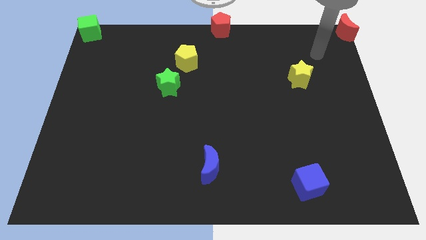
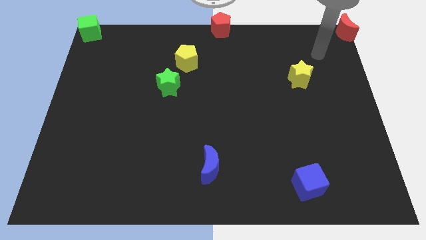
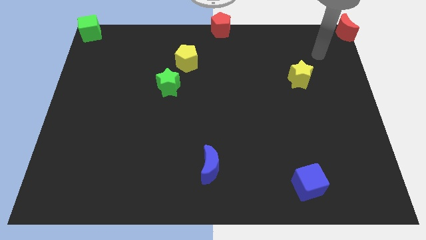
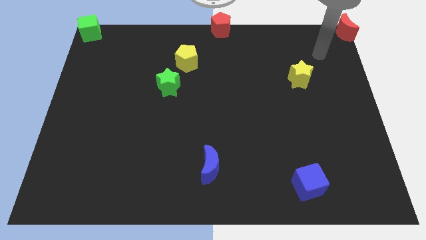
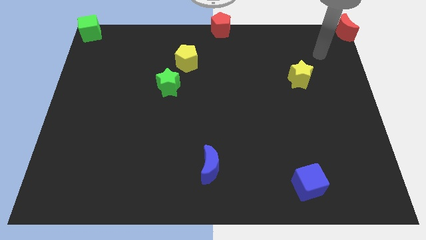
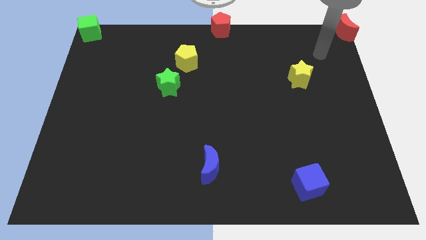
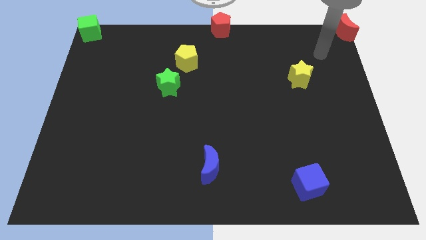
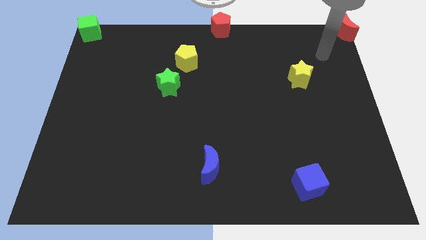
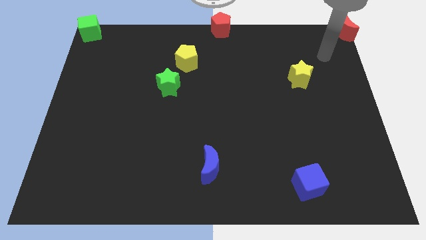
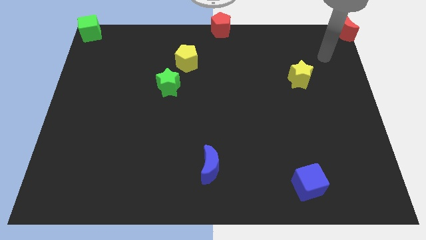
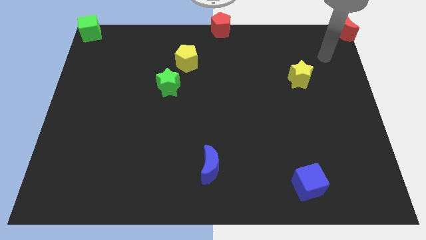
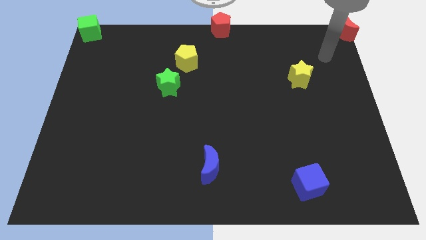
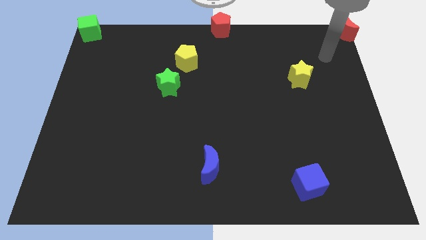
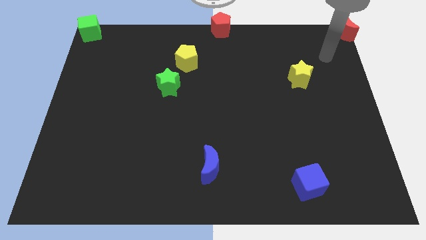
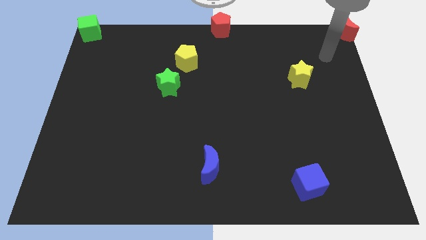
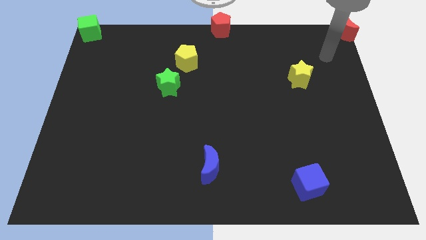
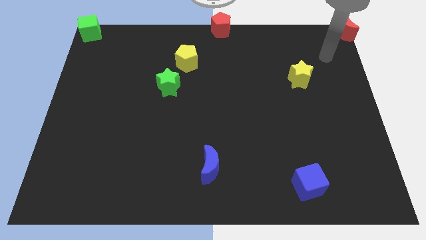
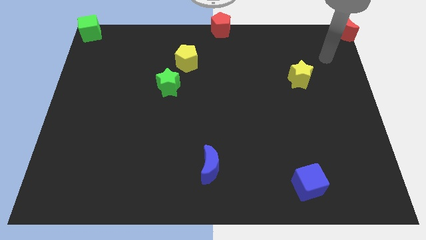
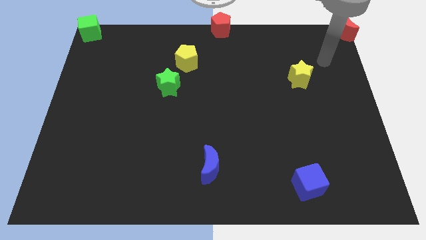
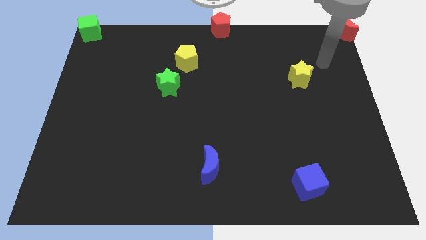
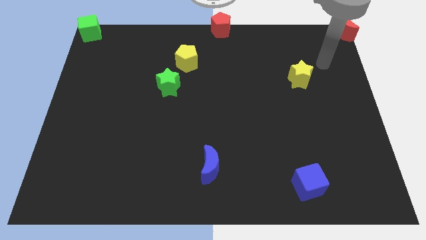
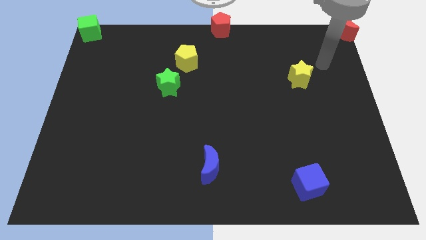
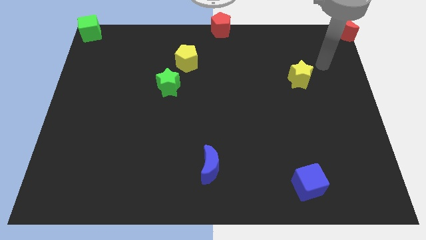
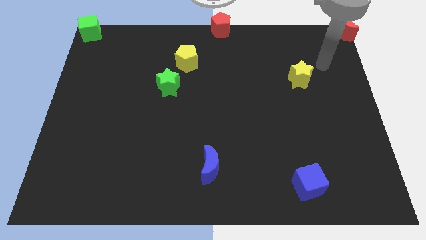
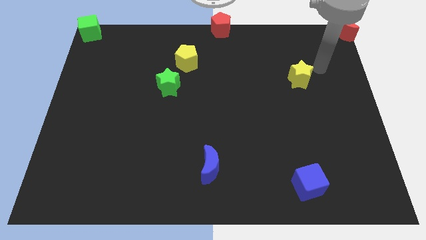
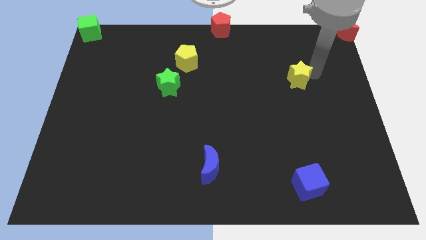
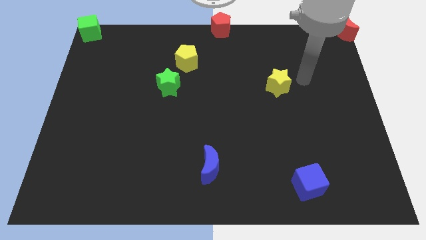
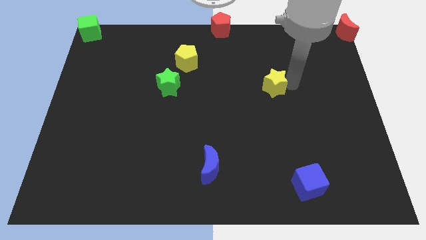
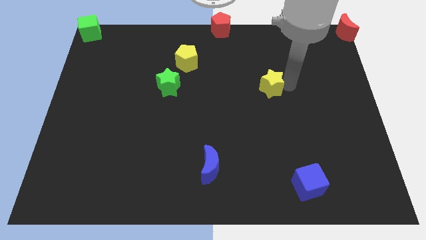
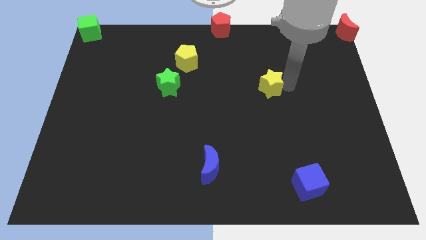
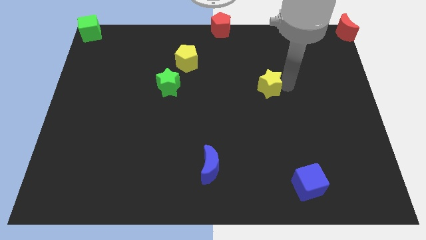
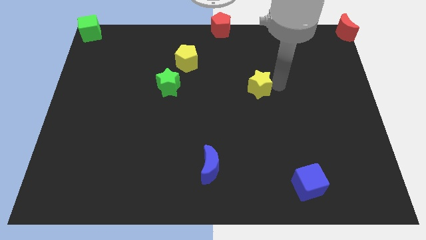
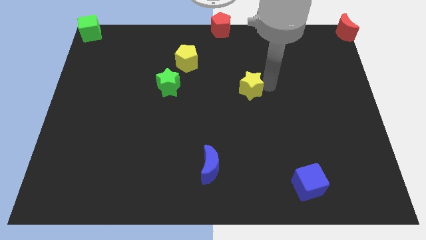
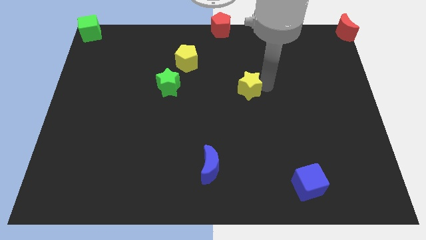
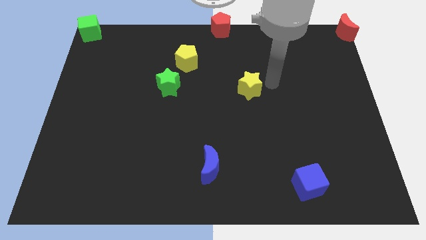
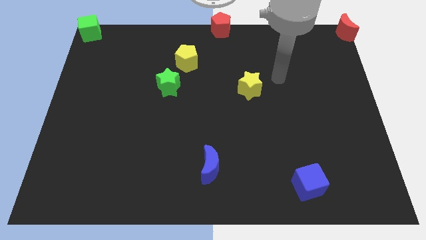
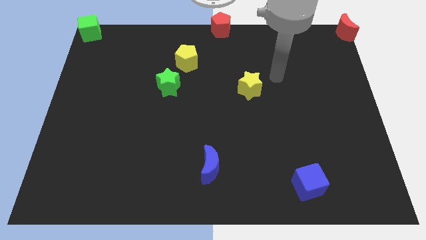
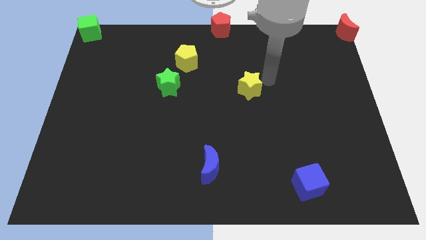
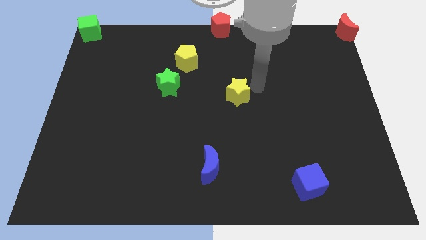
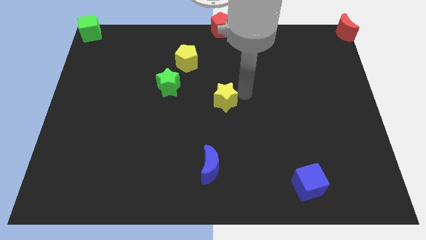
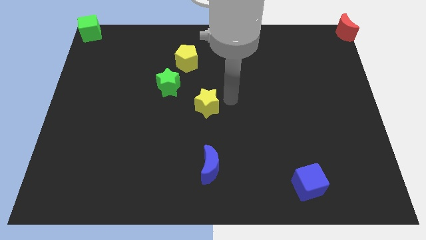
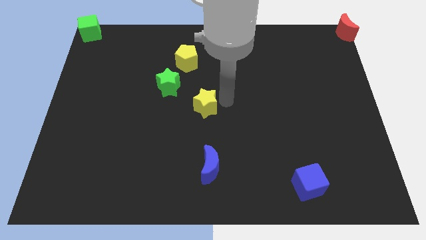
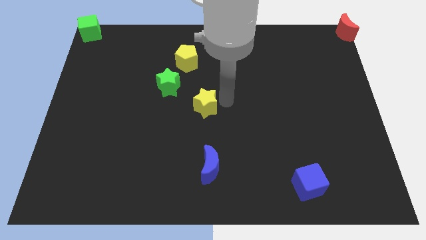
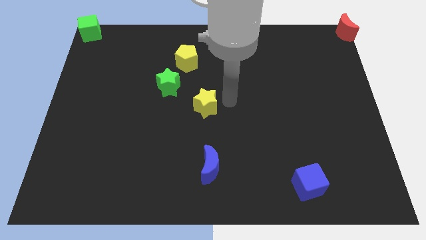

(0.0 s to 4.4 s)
place the yellow star at the center of the board

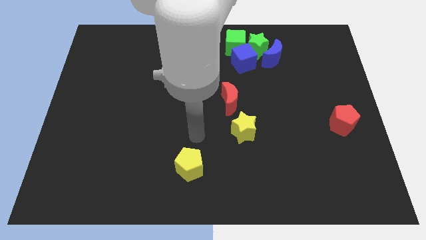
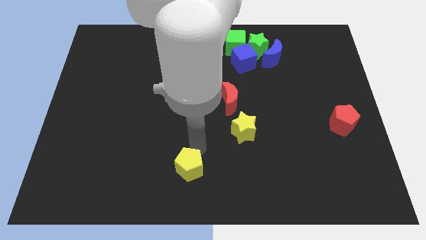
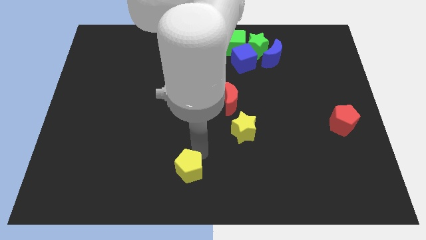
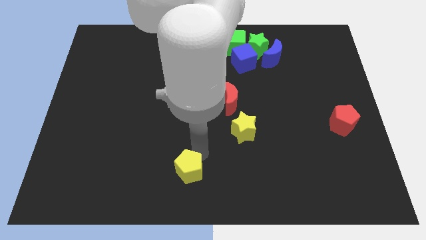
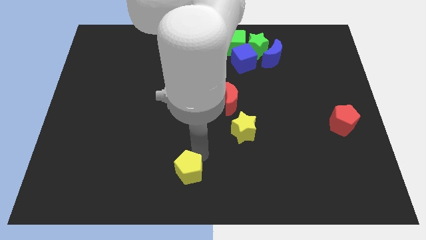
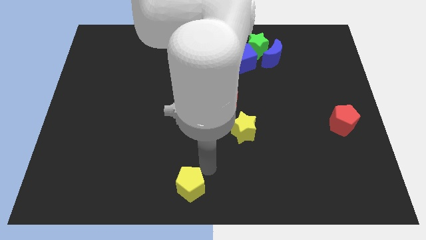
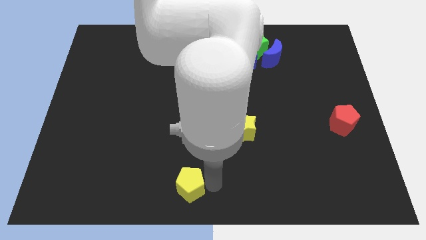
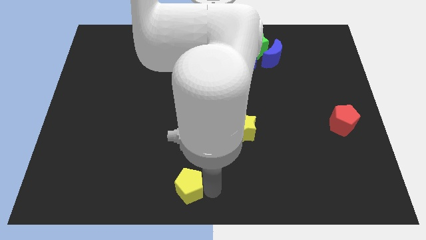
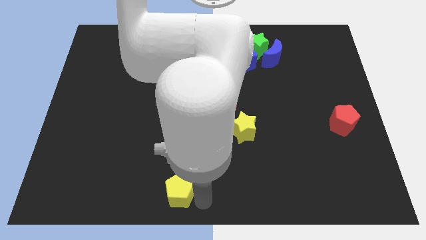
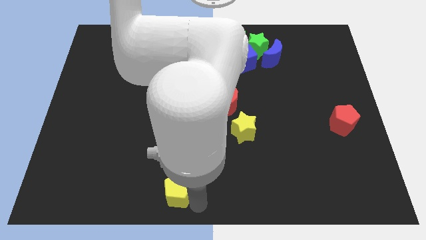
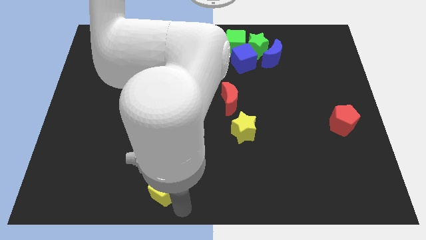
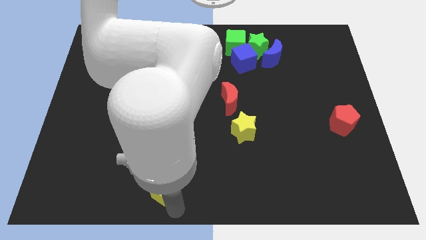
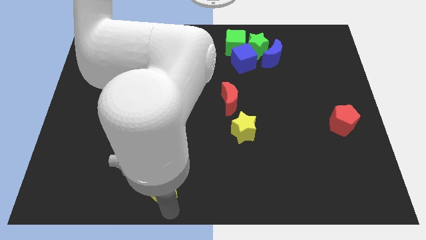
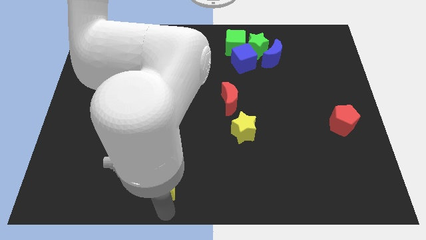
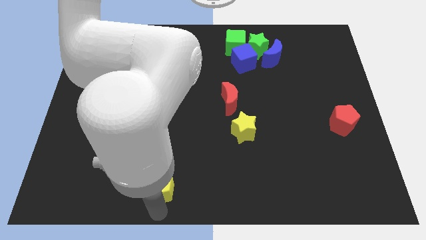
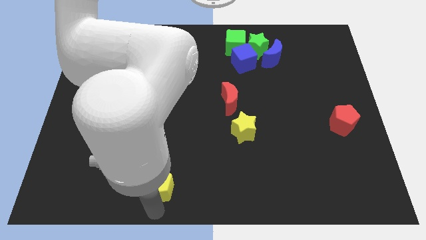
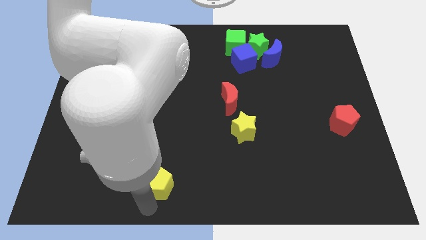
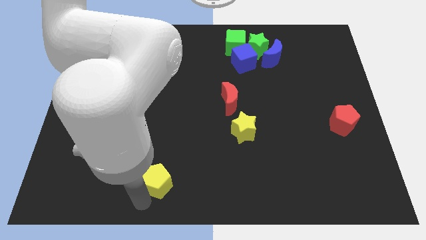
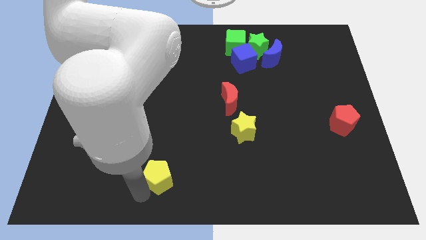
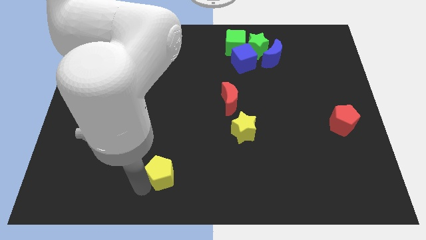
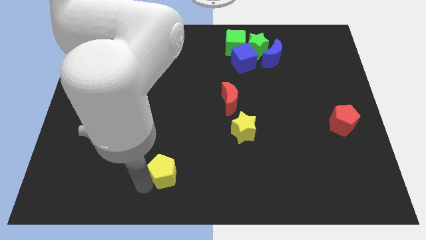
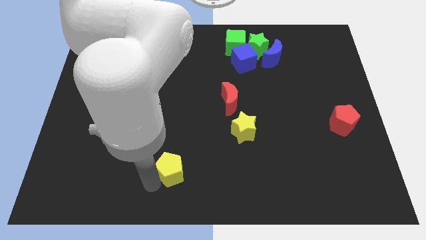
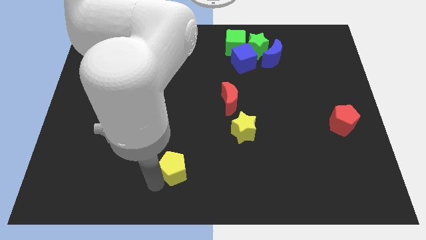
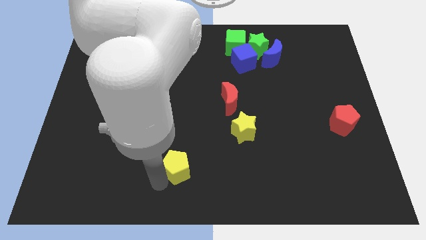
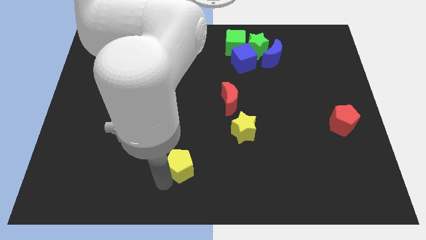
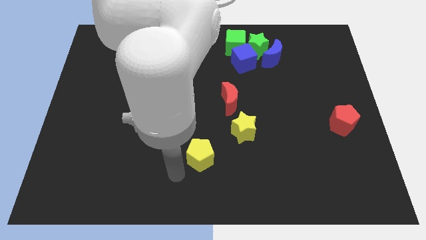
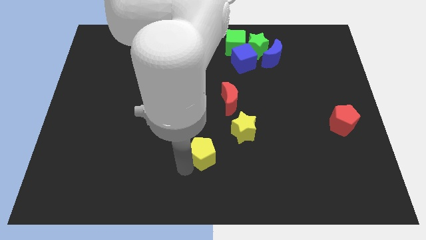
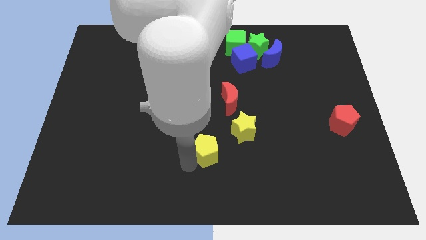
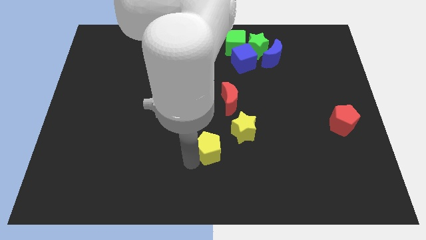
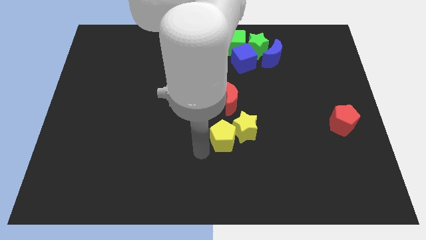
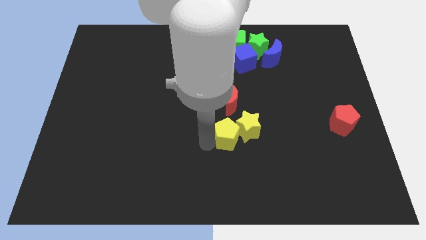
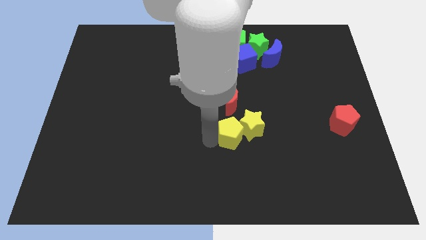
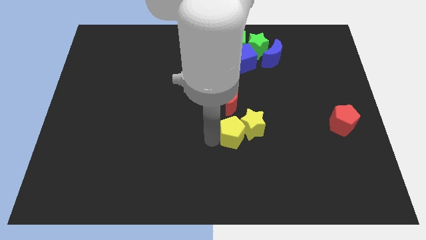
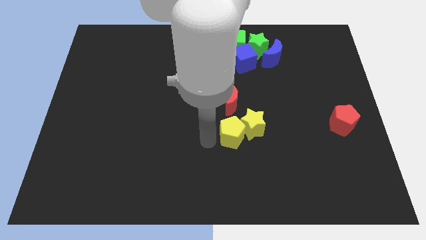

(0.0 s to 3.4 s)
slide the yellow pentagon into the yellow star

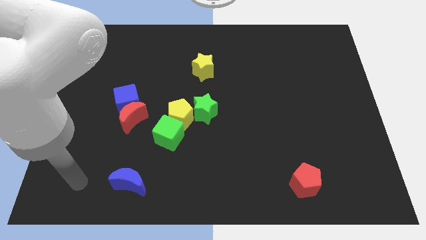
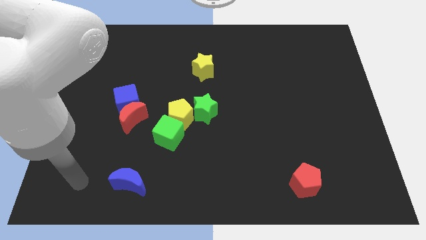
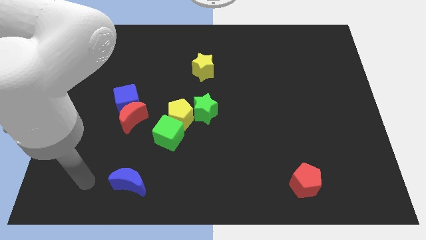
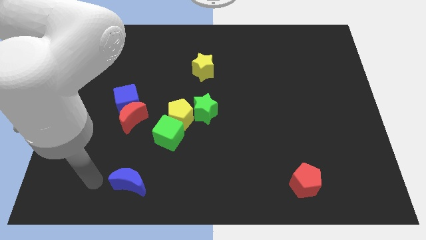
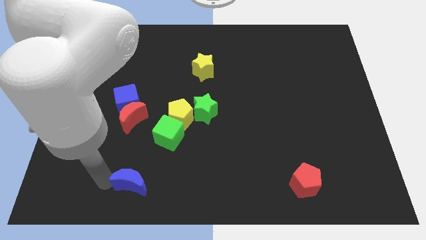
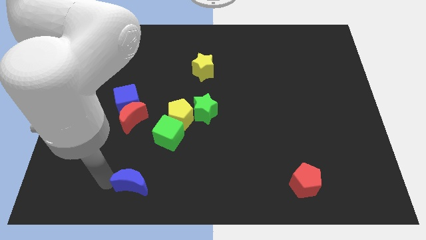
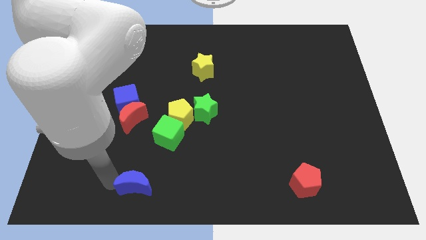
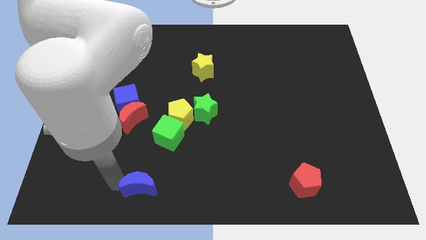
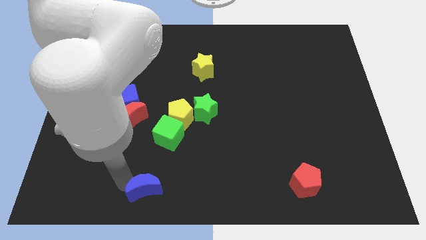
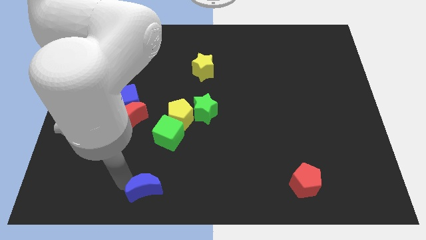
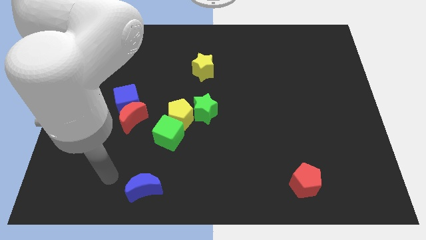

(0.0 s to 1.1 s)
push the blue moon towards the right side slightly

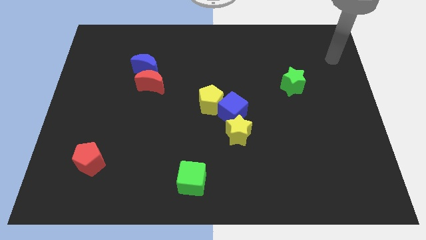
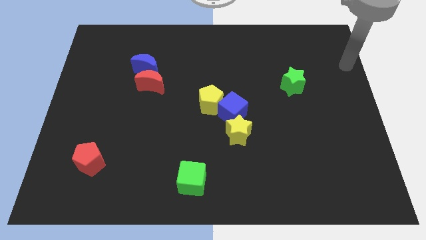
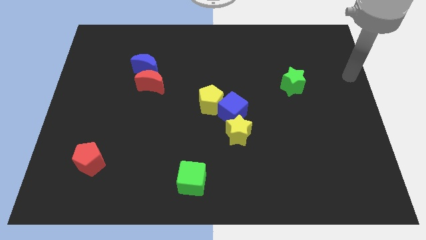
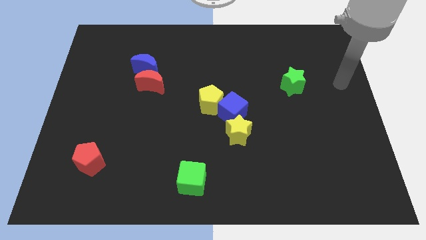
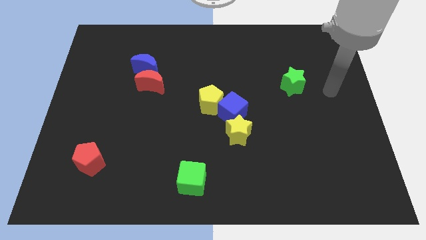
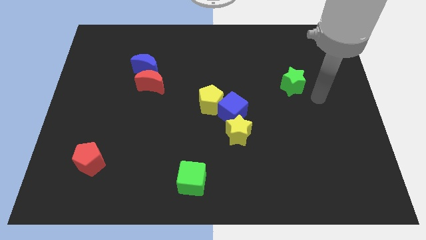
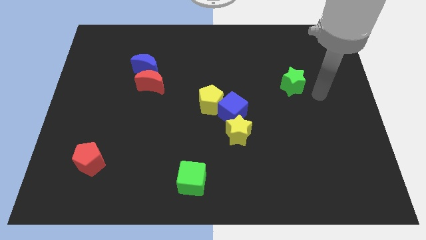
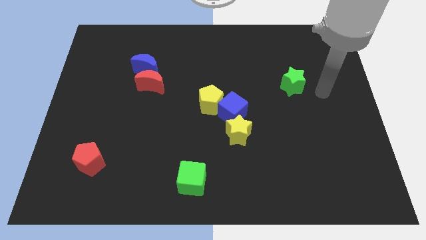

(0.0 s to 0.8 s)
move arm to the green star
